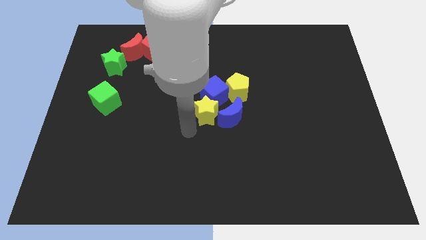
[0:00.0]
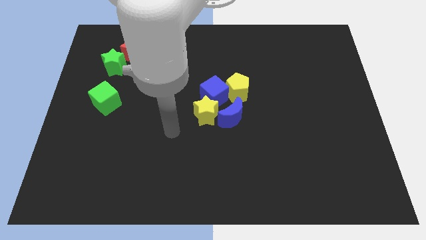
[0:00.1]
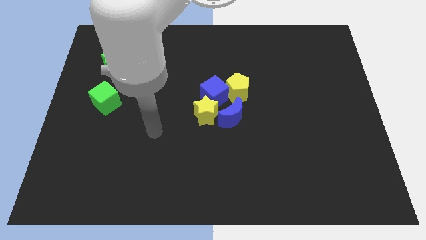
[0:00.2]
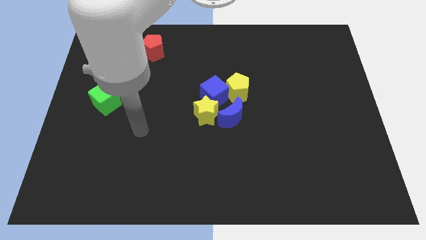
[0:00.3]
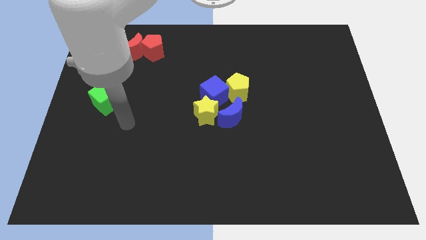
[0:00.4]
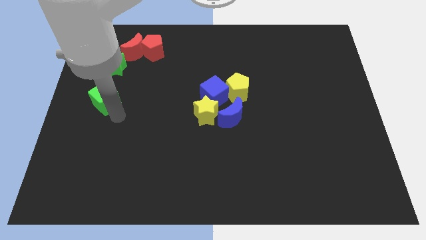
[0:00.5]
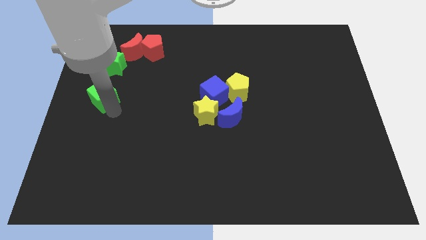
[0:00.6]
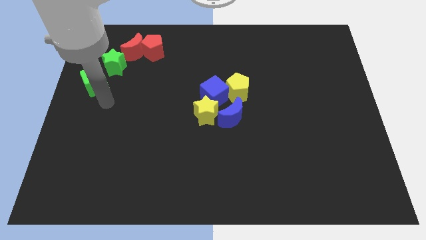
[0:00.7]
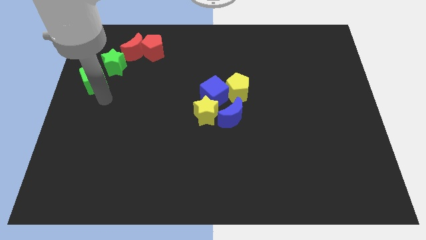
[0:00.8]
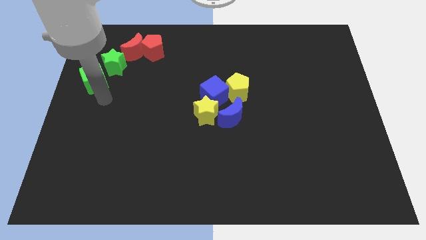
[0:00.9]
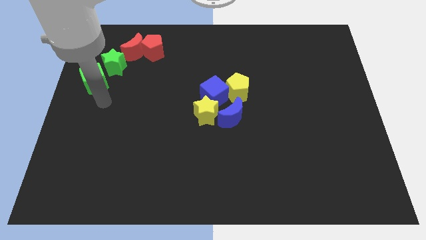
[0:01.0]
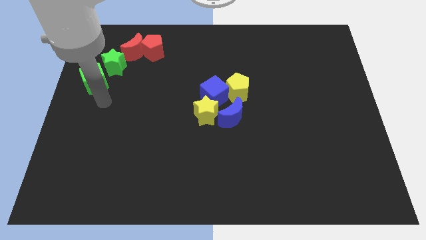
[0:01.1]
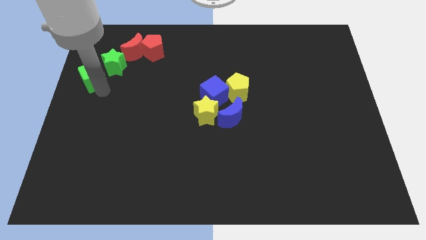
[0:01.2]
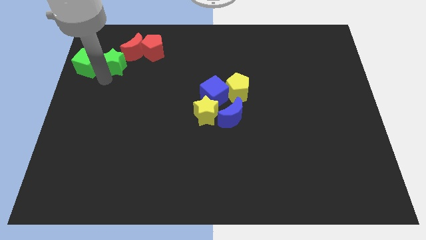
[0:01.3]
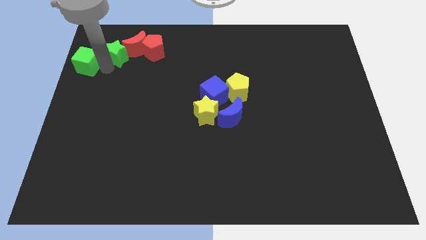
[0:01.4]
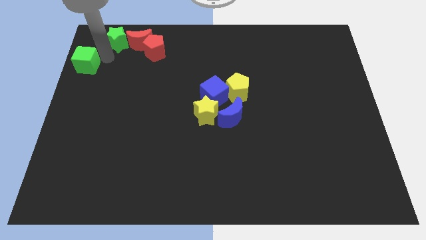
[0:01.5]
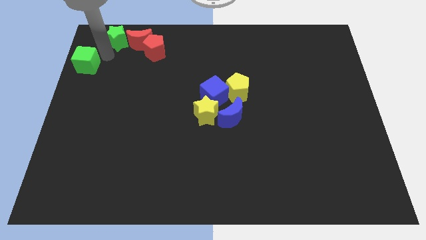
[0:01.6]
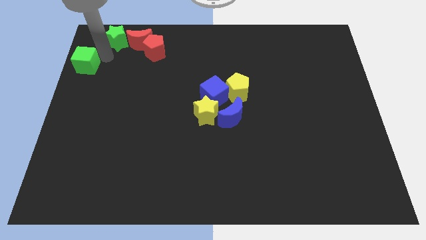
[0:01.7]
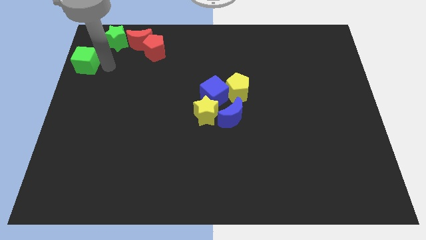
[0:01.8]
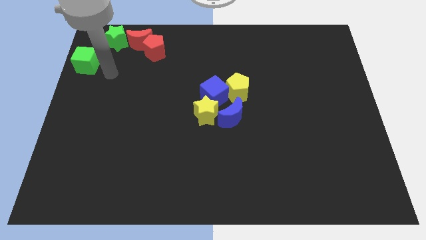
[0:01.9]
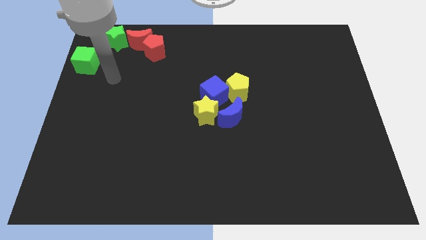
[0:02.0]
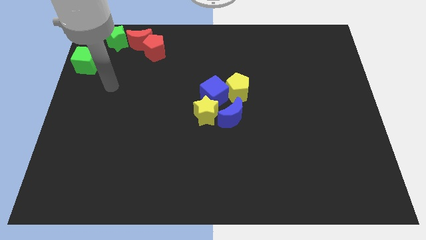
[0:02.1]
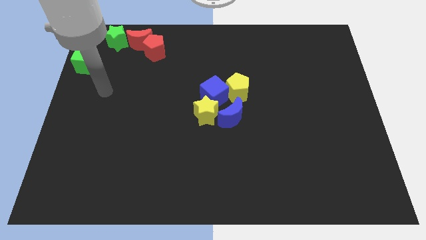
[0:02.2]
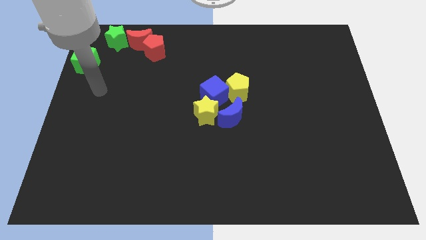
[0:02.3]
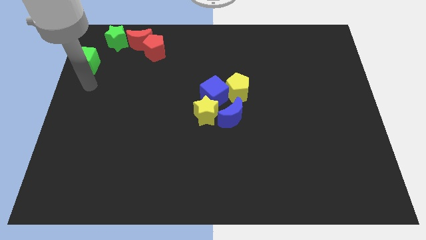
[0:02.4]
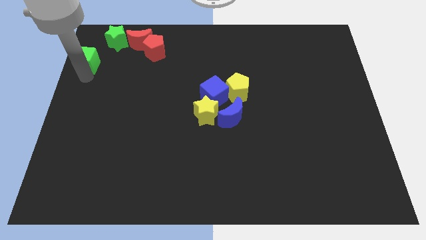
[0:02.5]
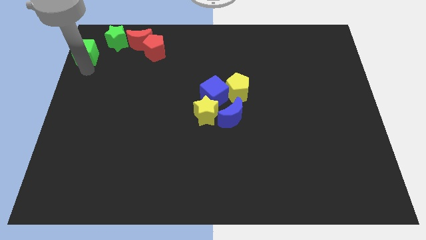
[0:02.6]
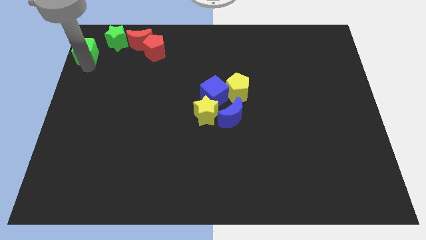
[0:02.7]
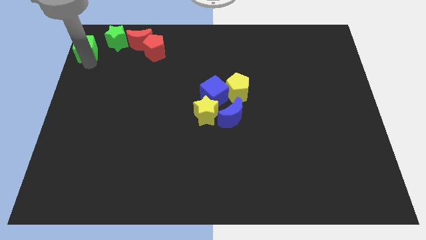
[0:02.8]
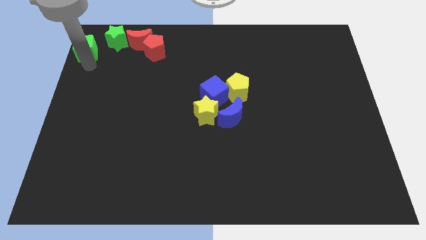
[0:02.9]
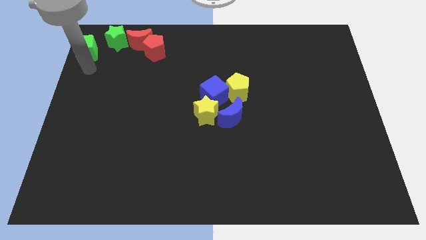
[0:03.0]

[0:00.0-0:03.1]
push the green cube and the green star towards top

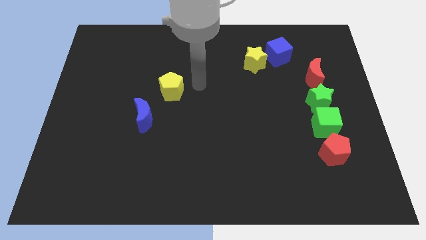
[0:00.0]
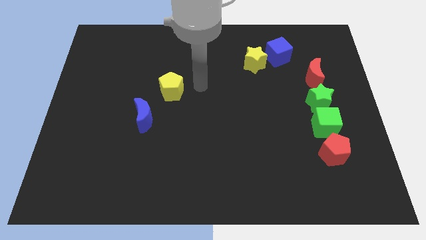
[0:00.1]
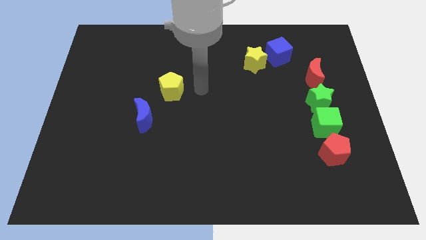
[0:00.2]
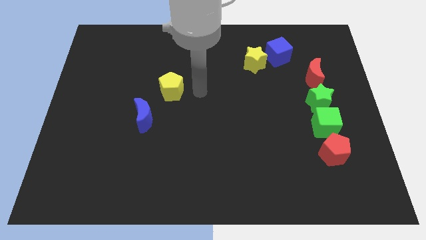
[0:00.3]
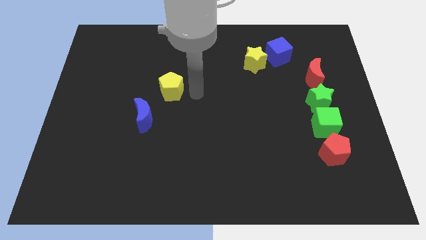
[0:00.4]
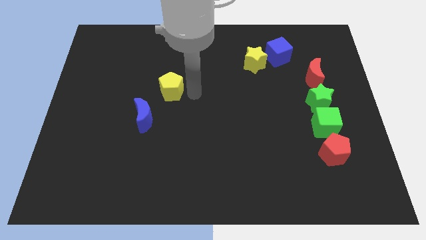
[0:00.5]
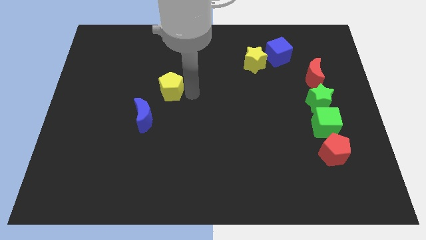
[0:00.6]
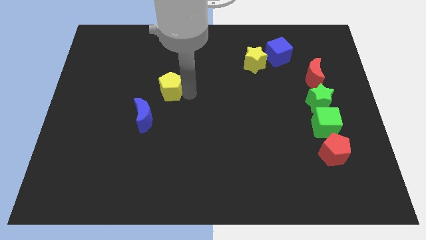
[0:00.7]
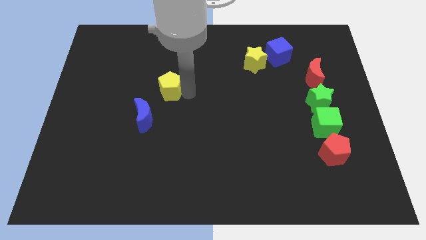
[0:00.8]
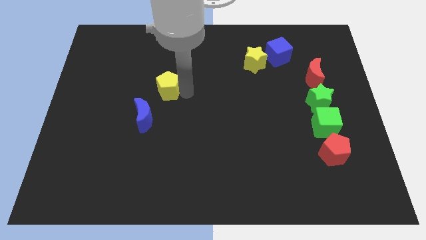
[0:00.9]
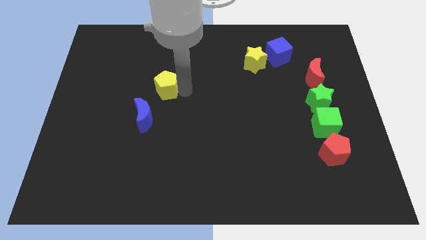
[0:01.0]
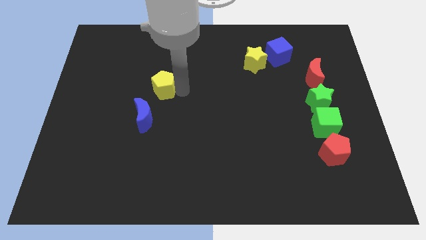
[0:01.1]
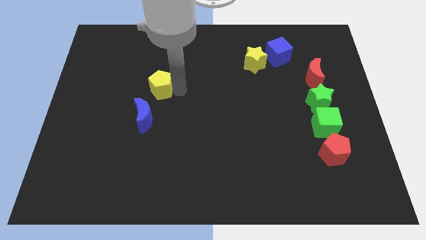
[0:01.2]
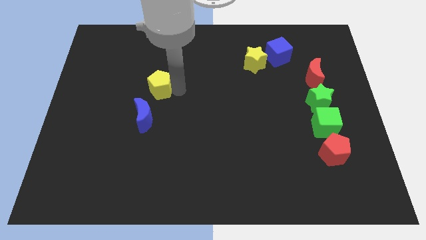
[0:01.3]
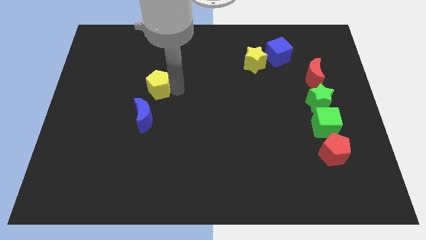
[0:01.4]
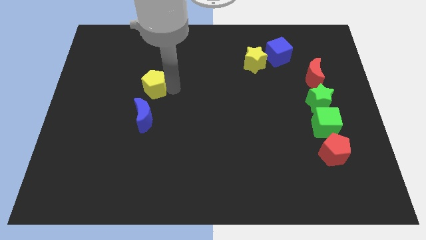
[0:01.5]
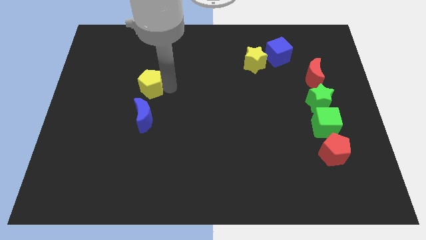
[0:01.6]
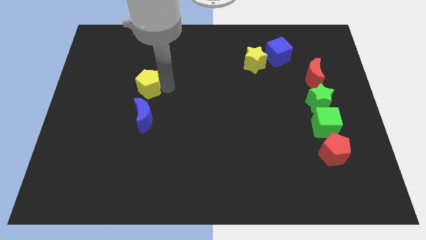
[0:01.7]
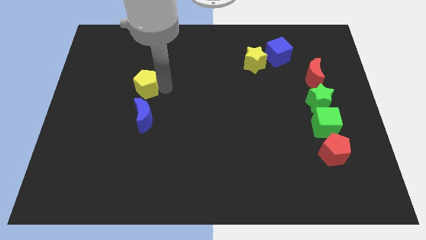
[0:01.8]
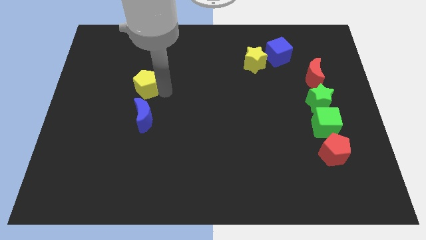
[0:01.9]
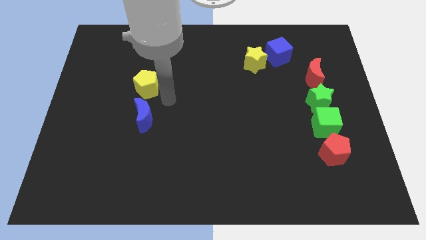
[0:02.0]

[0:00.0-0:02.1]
push the yellow pentagon to the top of the blue crescent

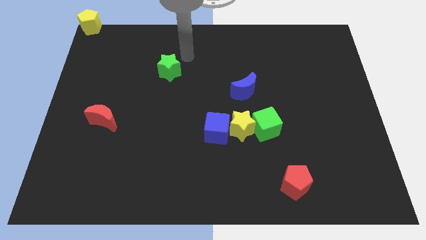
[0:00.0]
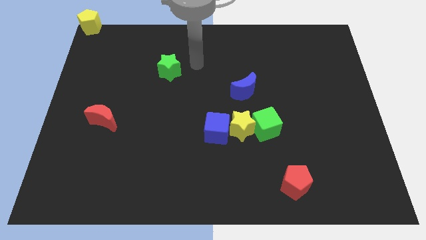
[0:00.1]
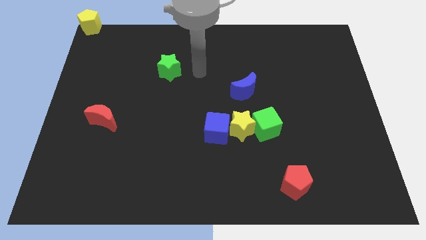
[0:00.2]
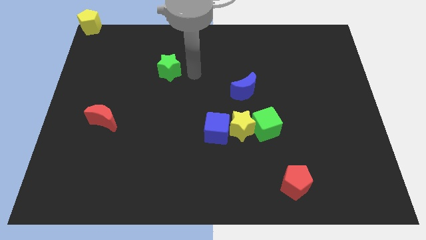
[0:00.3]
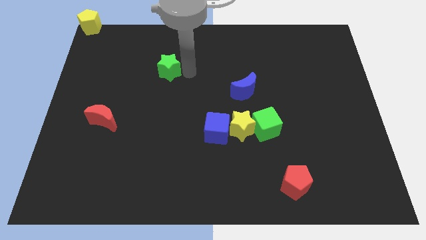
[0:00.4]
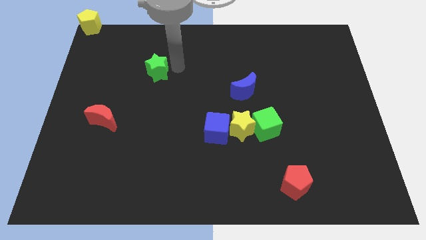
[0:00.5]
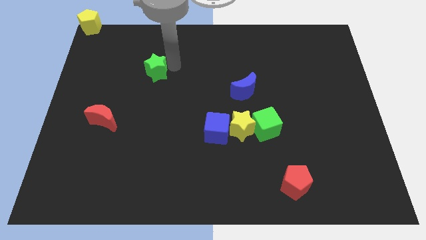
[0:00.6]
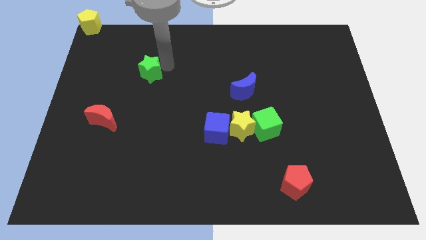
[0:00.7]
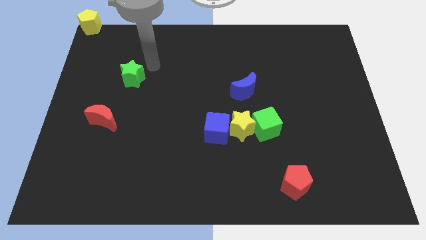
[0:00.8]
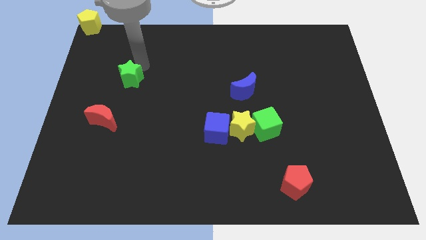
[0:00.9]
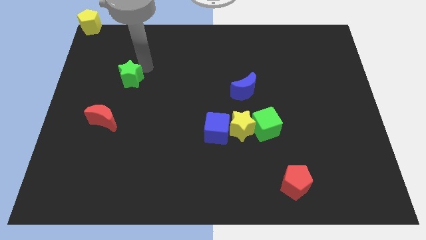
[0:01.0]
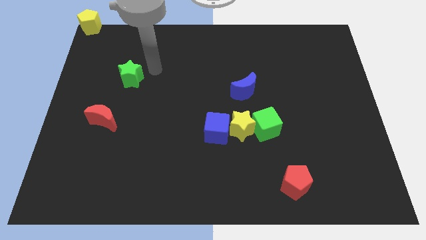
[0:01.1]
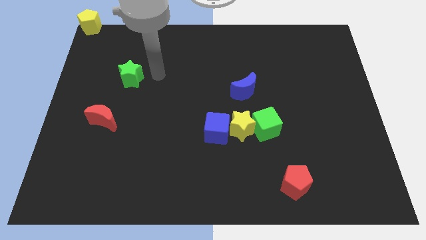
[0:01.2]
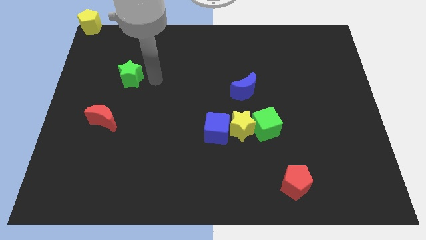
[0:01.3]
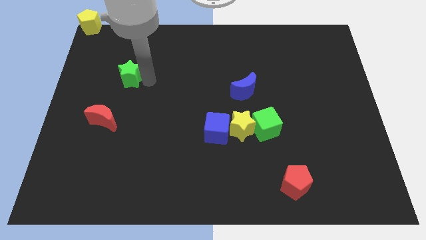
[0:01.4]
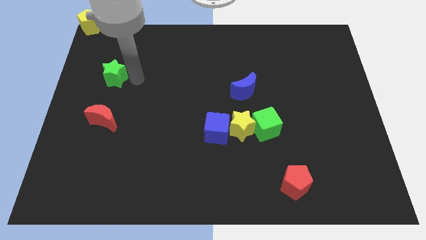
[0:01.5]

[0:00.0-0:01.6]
put the green star vertically above the red moon

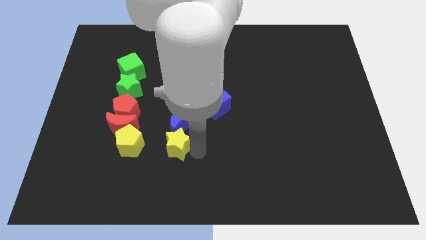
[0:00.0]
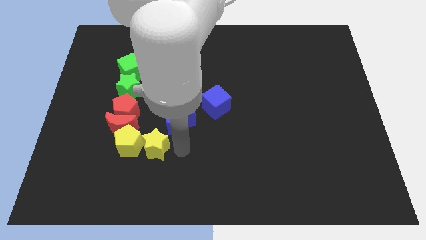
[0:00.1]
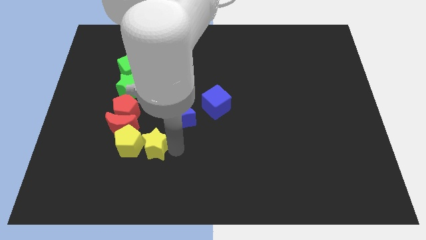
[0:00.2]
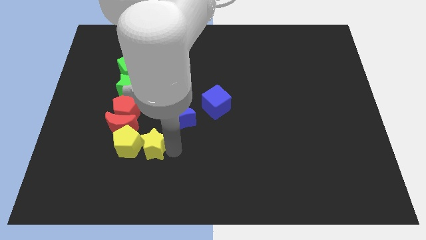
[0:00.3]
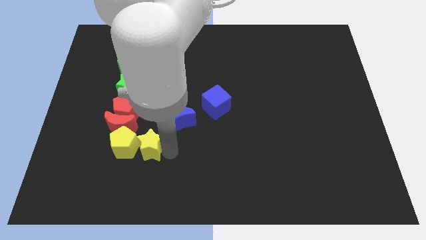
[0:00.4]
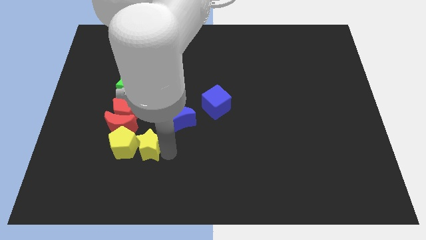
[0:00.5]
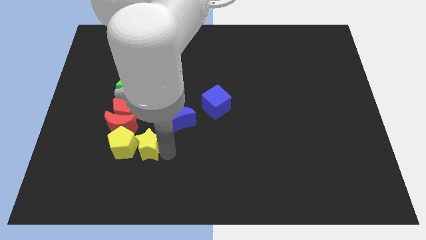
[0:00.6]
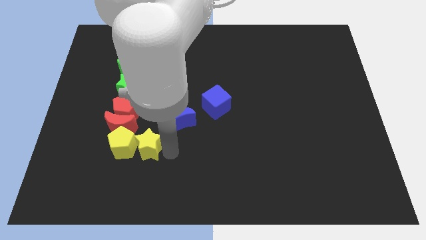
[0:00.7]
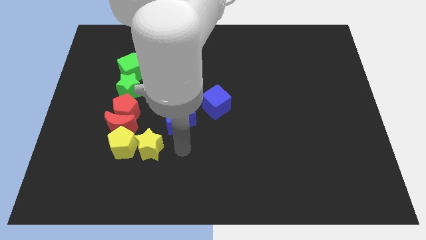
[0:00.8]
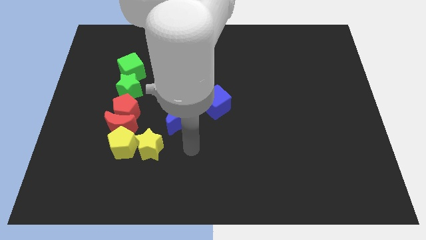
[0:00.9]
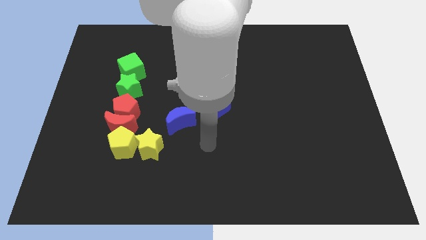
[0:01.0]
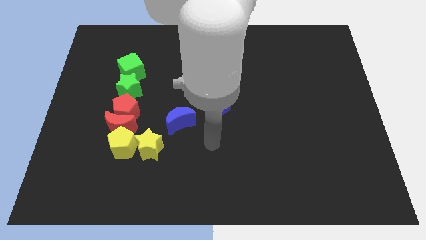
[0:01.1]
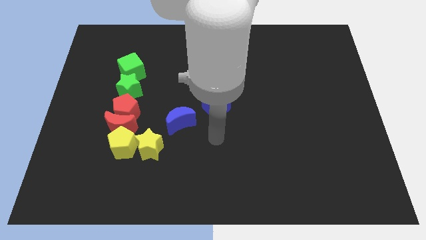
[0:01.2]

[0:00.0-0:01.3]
drag the yellow star and place it close to the yellow pentagon

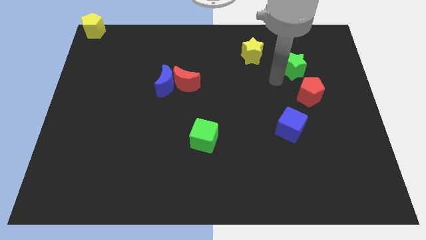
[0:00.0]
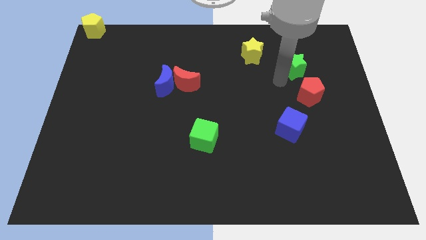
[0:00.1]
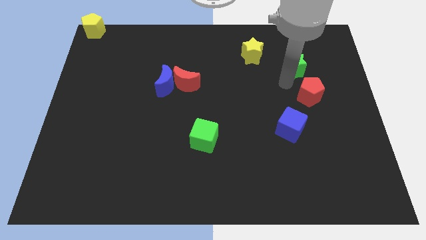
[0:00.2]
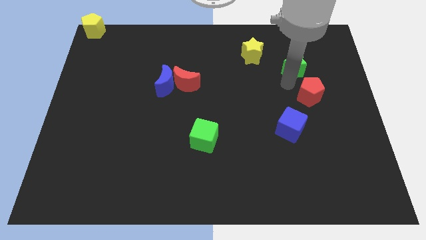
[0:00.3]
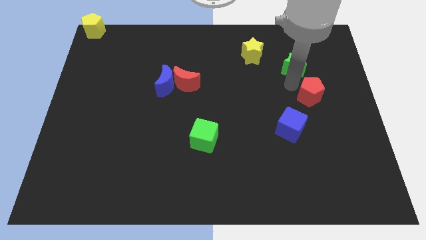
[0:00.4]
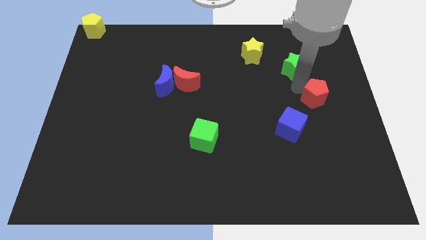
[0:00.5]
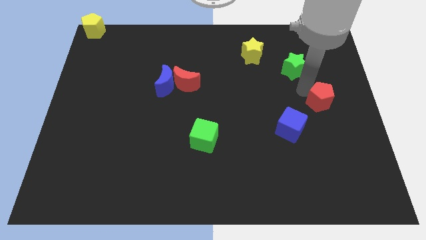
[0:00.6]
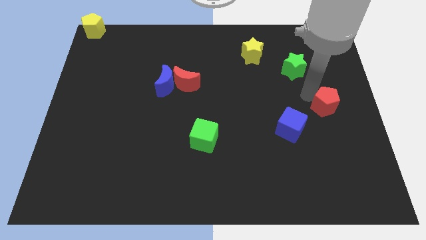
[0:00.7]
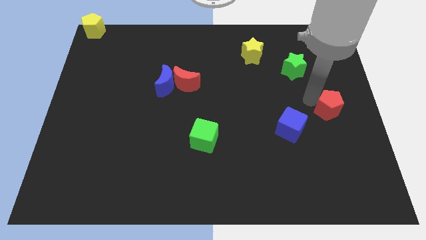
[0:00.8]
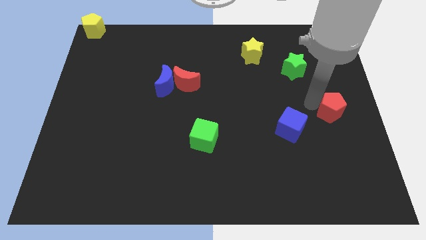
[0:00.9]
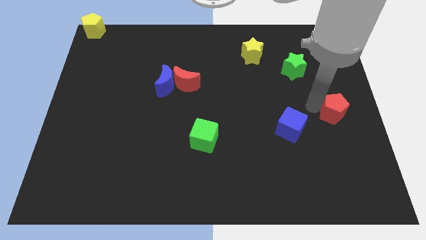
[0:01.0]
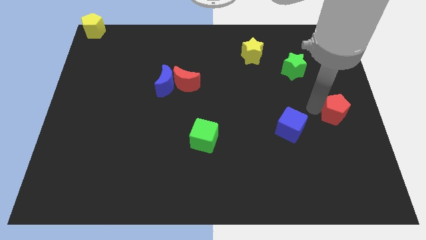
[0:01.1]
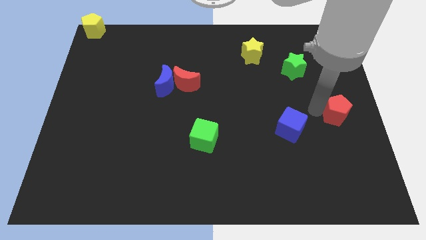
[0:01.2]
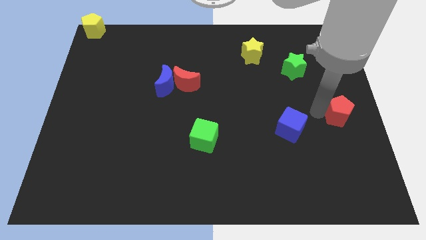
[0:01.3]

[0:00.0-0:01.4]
push the red pentagon away from the green star
